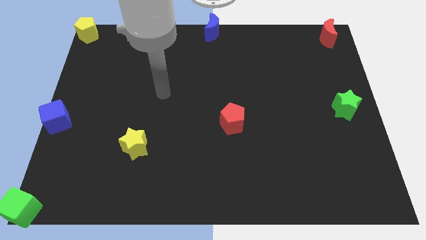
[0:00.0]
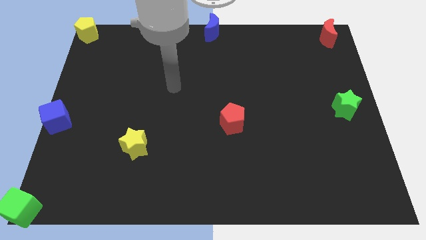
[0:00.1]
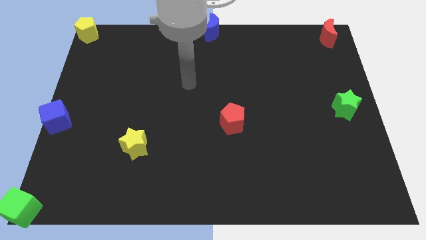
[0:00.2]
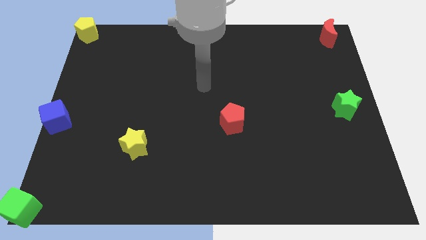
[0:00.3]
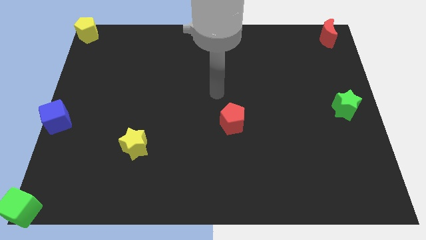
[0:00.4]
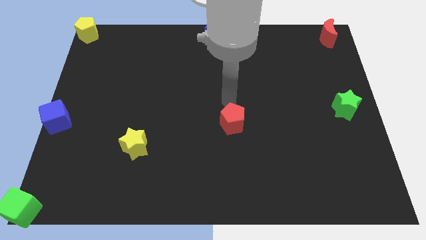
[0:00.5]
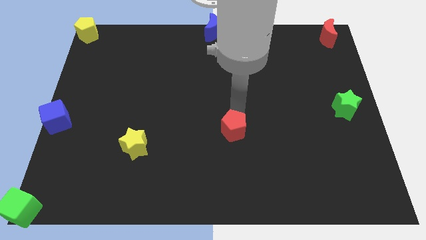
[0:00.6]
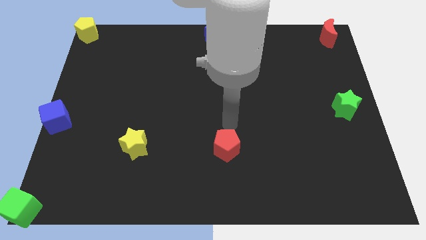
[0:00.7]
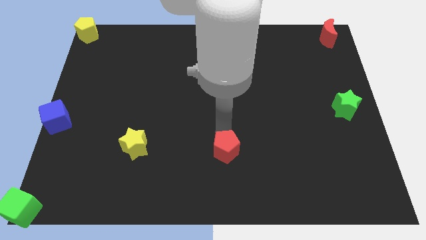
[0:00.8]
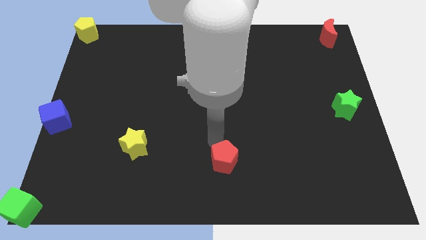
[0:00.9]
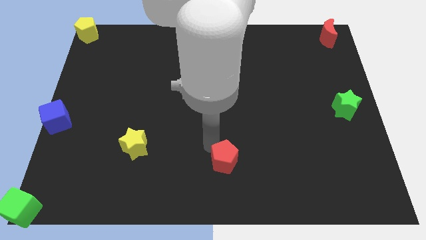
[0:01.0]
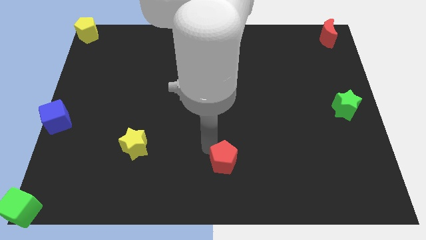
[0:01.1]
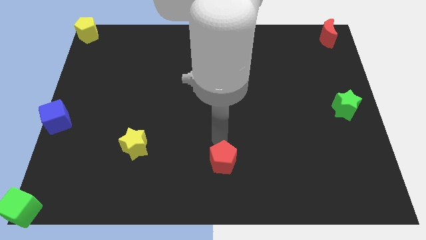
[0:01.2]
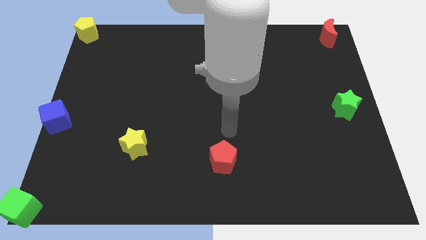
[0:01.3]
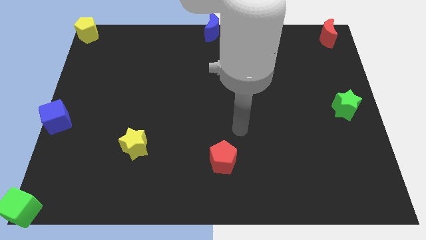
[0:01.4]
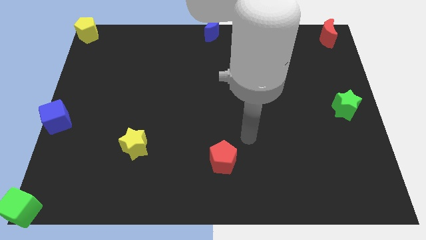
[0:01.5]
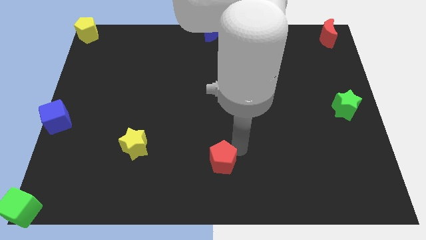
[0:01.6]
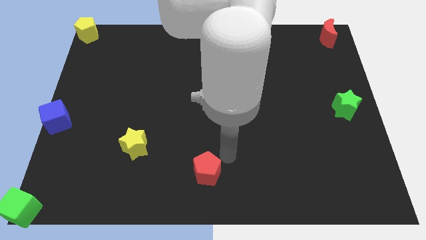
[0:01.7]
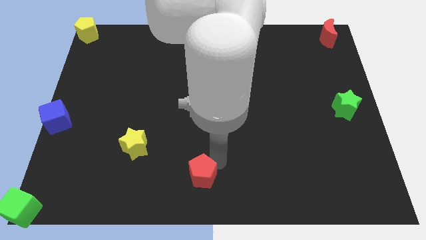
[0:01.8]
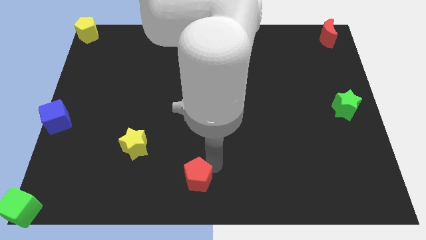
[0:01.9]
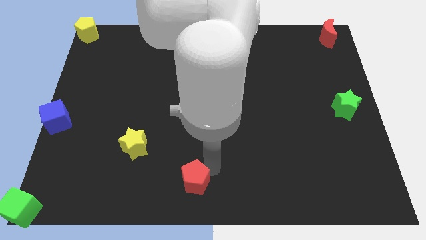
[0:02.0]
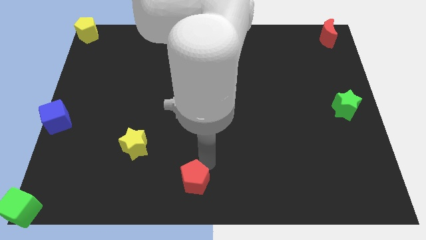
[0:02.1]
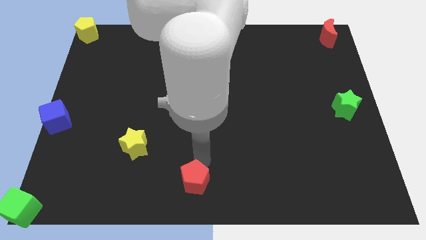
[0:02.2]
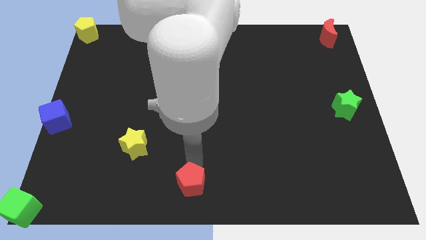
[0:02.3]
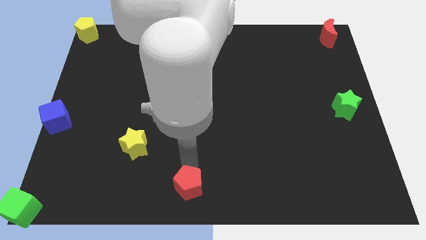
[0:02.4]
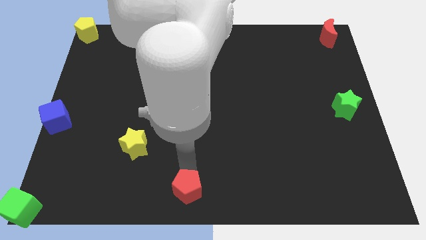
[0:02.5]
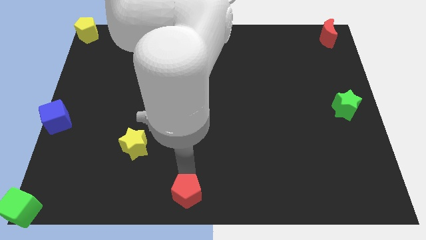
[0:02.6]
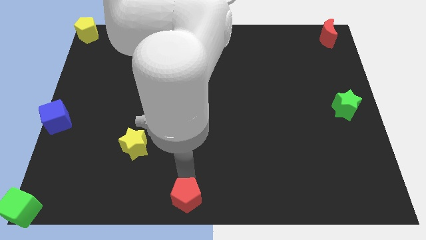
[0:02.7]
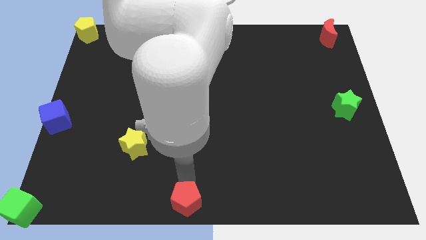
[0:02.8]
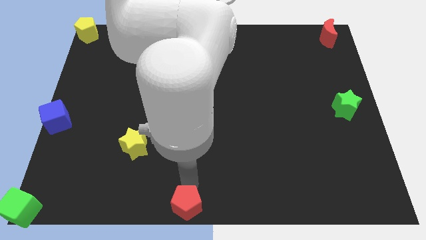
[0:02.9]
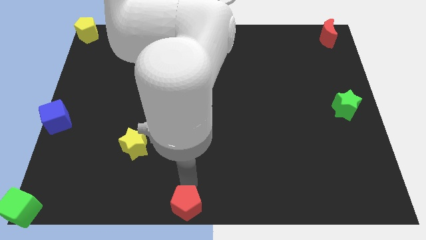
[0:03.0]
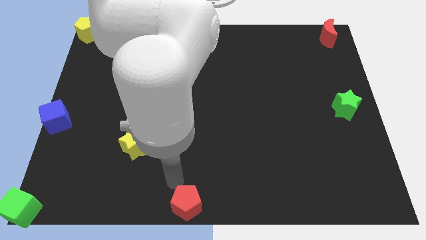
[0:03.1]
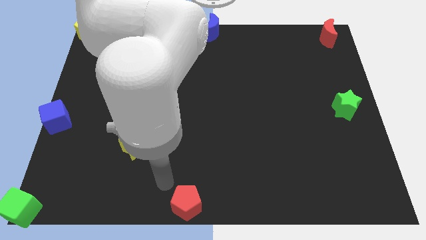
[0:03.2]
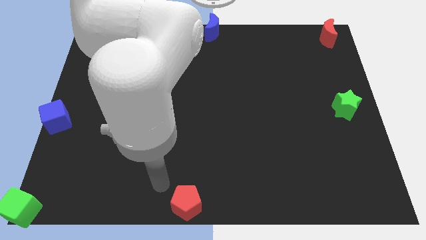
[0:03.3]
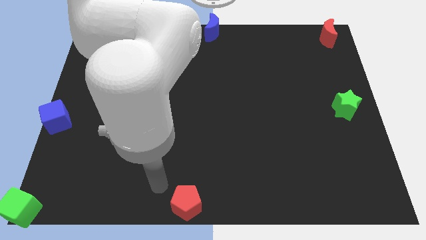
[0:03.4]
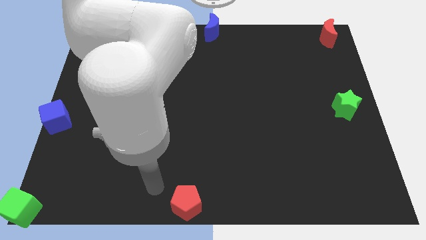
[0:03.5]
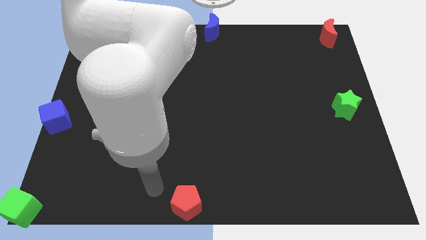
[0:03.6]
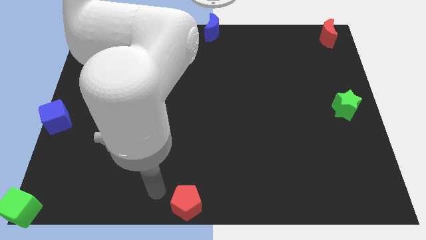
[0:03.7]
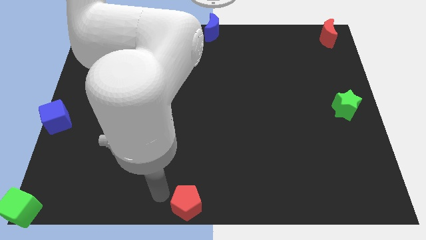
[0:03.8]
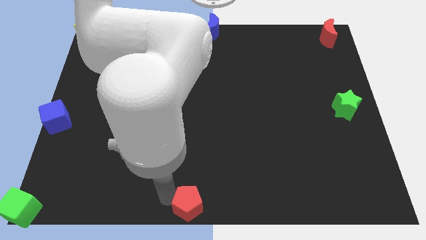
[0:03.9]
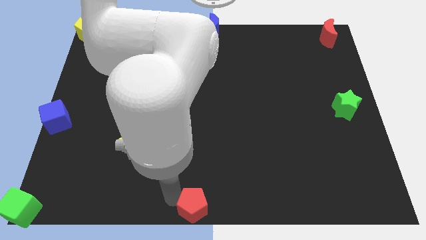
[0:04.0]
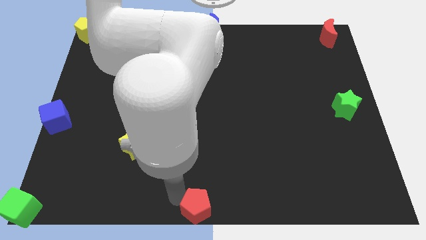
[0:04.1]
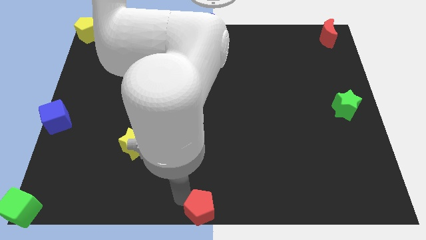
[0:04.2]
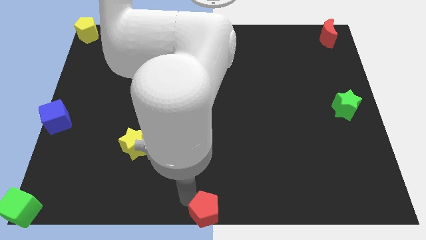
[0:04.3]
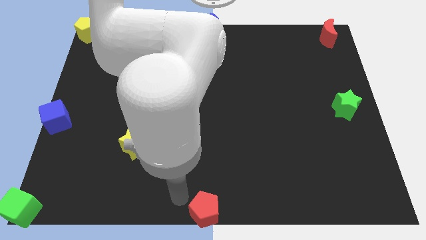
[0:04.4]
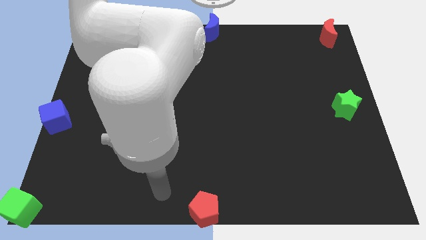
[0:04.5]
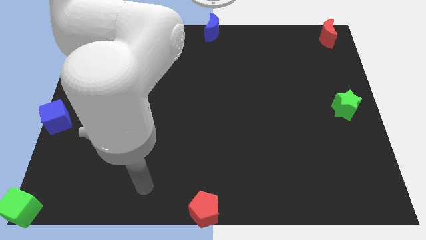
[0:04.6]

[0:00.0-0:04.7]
move the red pentagon to the bottom center of the board

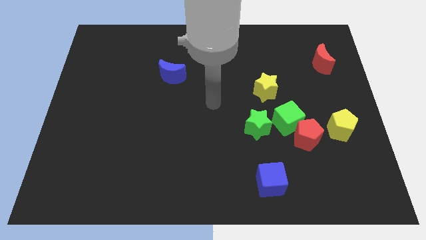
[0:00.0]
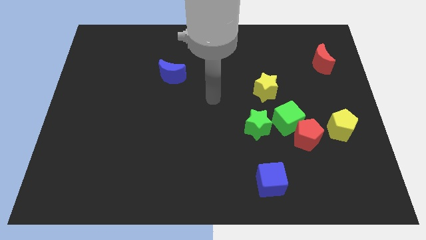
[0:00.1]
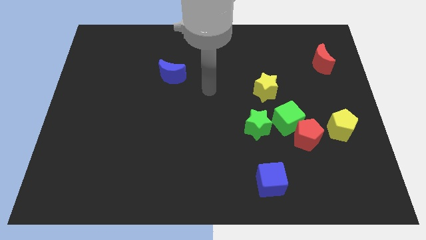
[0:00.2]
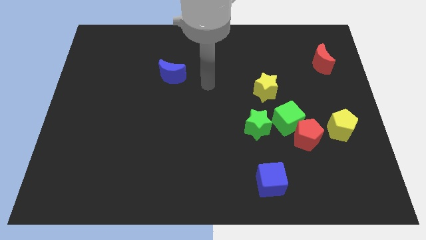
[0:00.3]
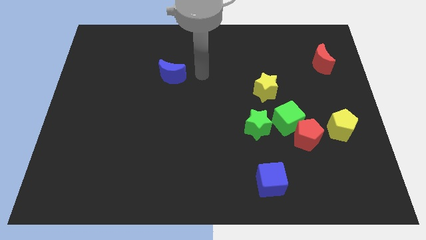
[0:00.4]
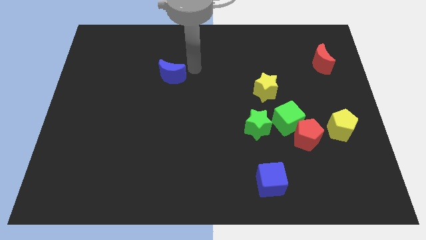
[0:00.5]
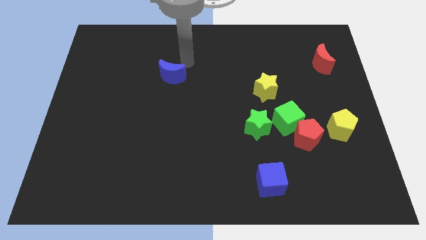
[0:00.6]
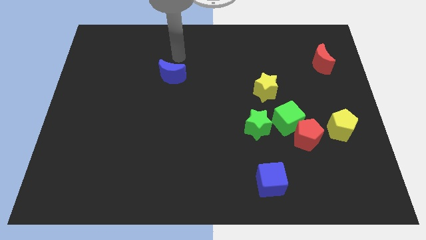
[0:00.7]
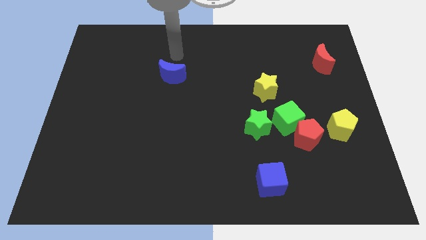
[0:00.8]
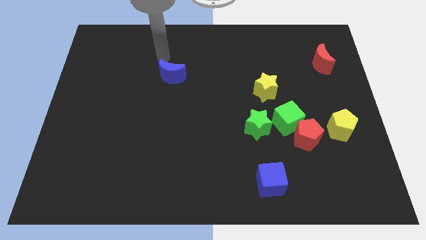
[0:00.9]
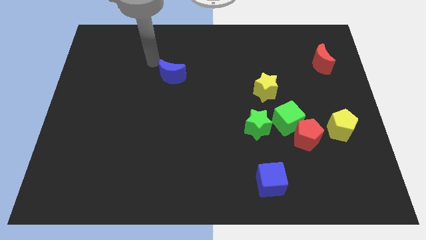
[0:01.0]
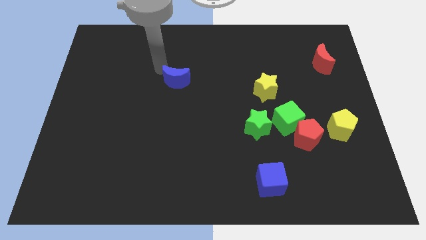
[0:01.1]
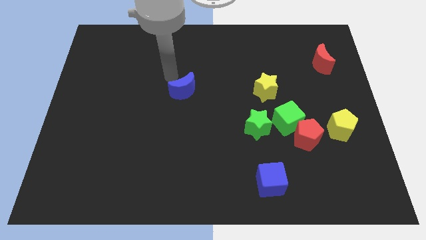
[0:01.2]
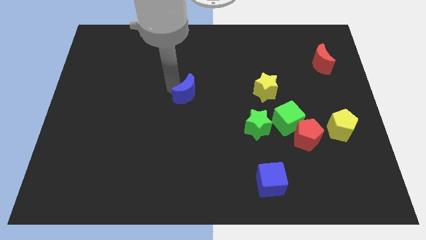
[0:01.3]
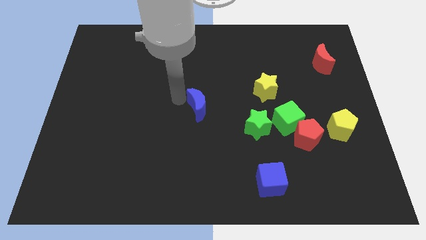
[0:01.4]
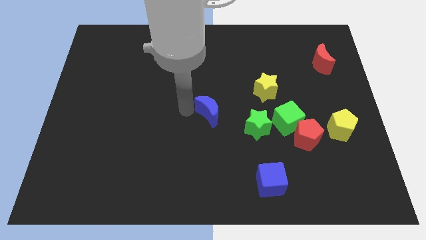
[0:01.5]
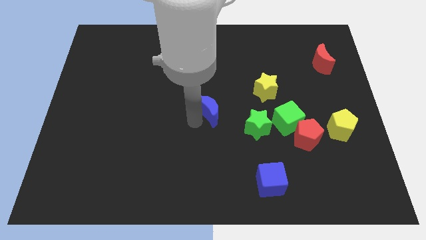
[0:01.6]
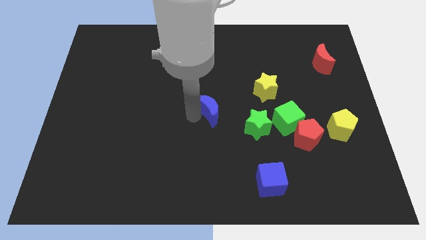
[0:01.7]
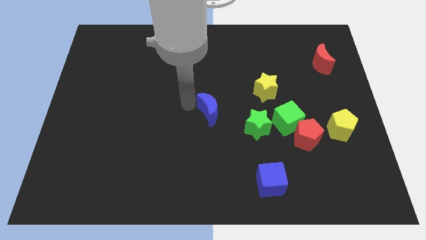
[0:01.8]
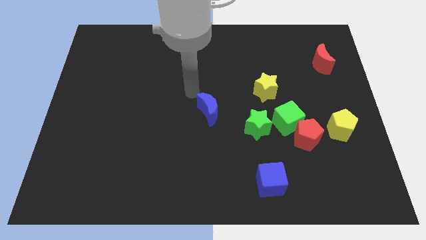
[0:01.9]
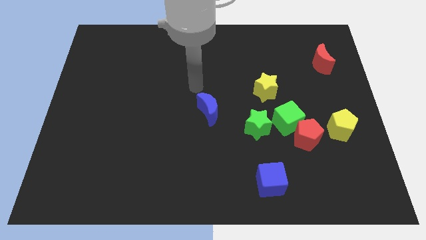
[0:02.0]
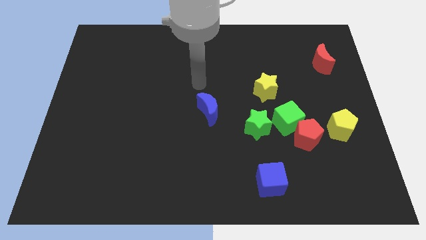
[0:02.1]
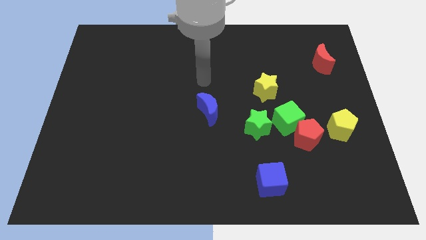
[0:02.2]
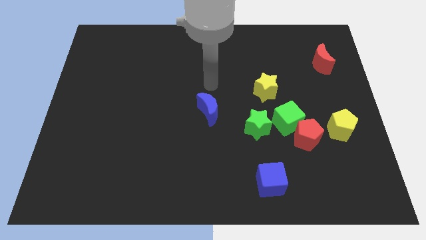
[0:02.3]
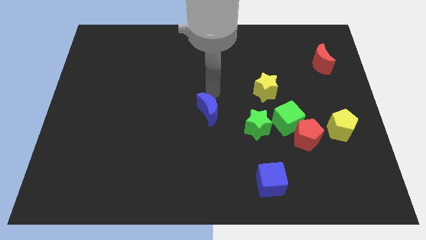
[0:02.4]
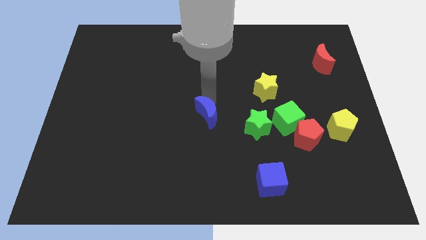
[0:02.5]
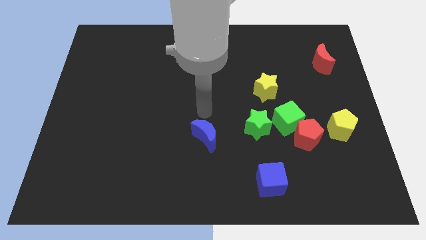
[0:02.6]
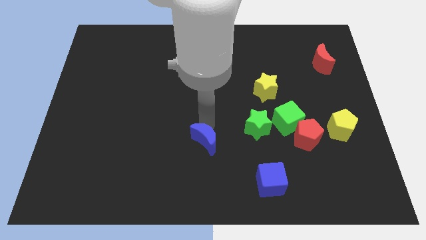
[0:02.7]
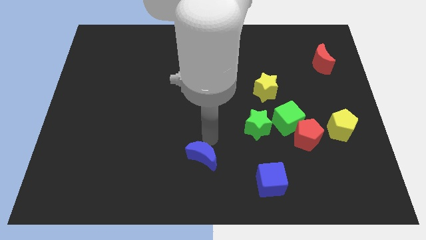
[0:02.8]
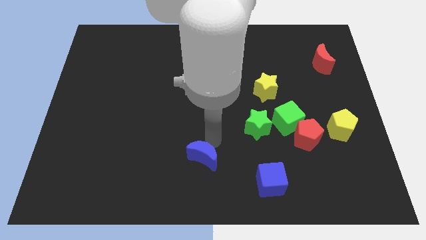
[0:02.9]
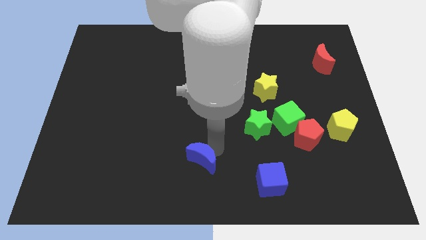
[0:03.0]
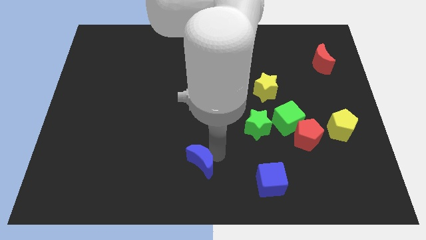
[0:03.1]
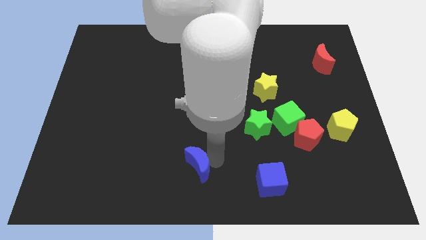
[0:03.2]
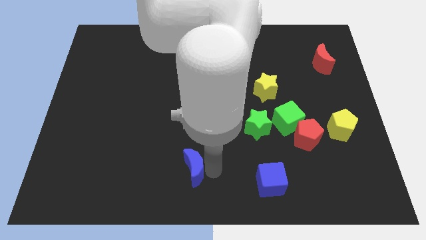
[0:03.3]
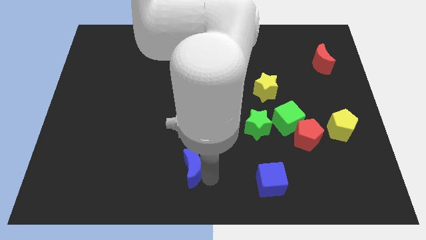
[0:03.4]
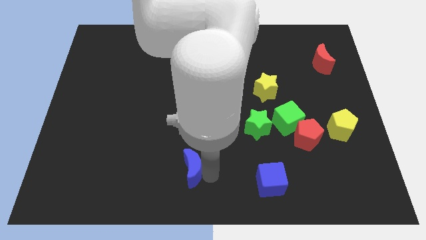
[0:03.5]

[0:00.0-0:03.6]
push the blue crescent to the bottom of the board

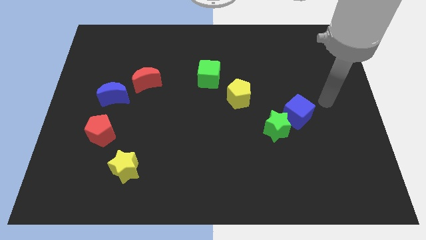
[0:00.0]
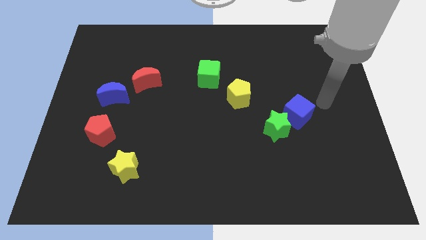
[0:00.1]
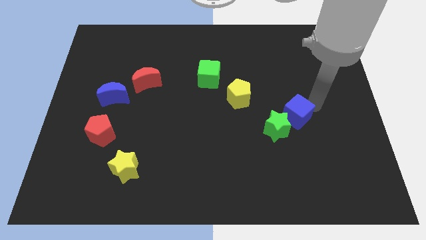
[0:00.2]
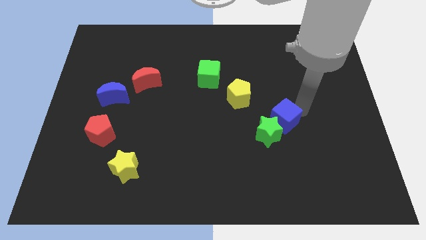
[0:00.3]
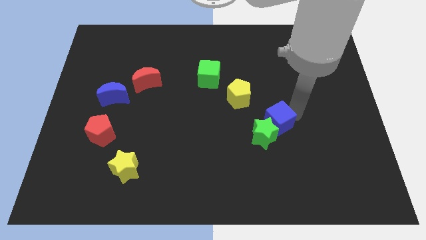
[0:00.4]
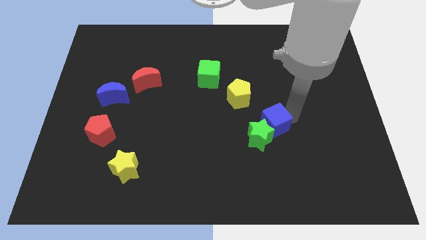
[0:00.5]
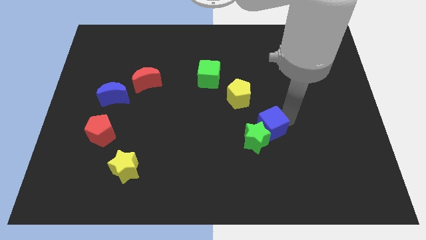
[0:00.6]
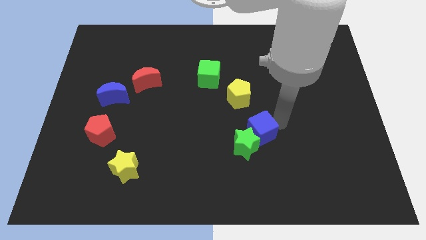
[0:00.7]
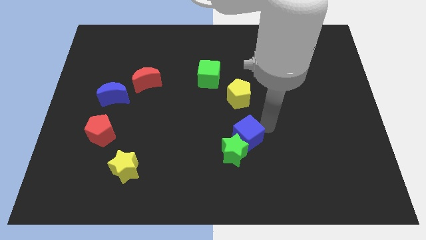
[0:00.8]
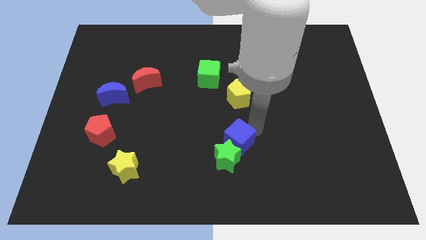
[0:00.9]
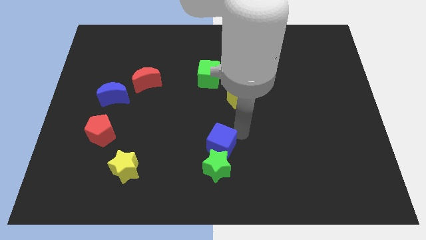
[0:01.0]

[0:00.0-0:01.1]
push the blue cube along with the green star towards the bottom center
